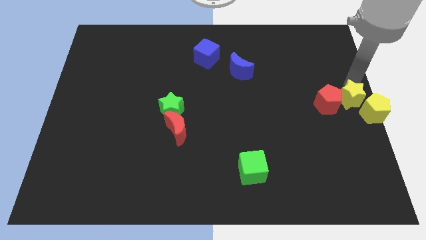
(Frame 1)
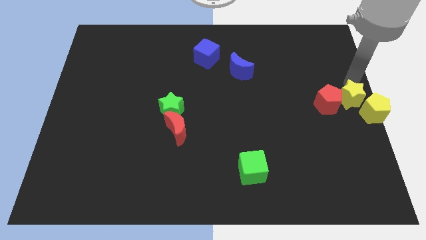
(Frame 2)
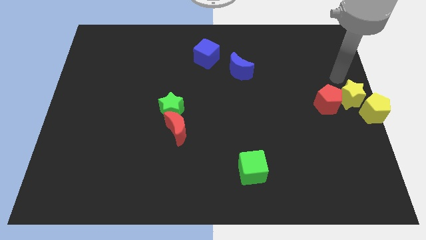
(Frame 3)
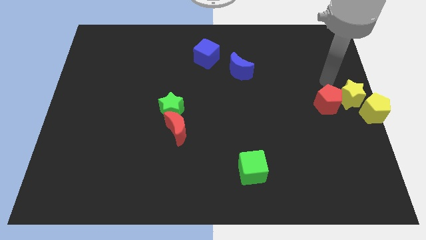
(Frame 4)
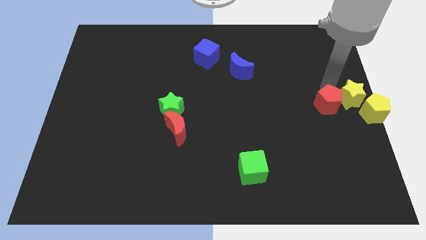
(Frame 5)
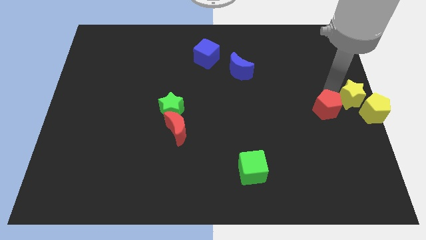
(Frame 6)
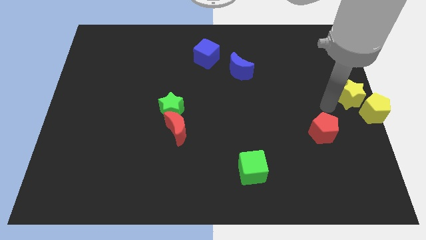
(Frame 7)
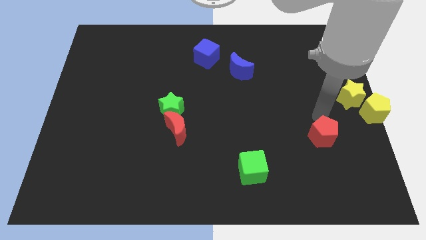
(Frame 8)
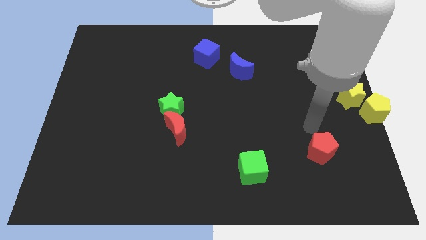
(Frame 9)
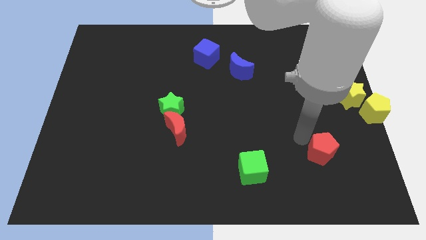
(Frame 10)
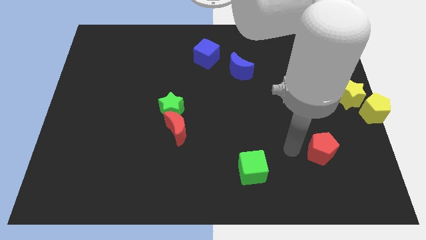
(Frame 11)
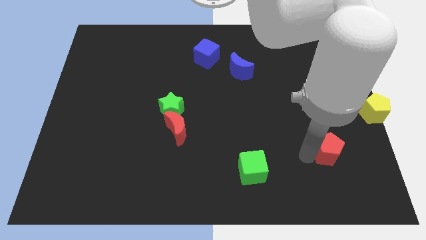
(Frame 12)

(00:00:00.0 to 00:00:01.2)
move the red pentagon diagonally on the bottom left side of the yellow pentagon

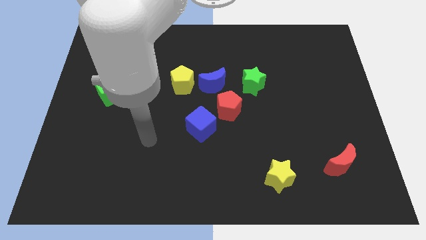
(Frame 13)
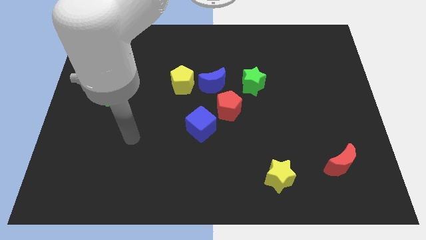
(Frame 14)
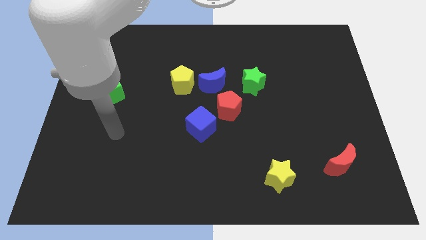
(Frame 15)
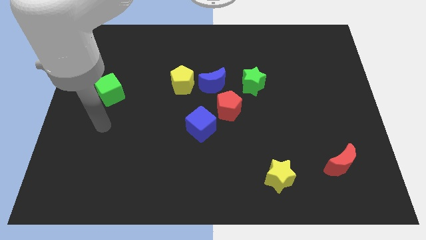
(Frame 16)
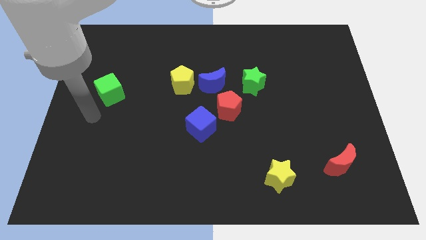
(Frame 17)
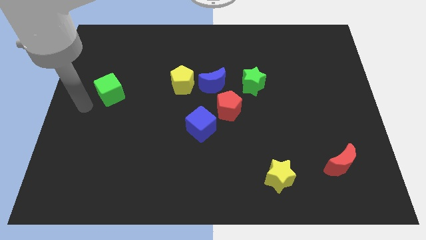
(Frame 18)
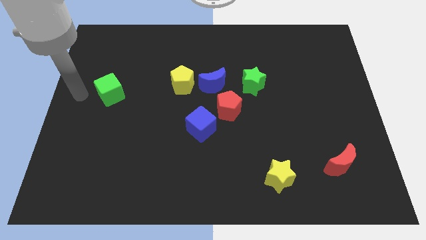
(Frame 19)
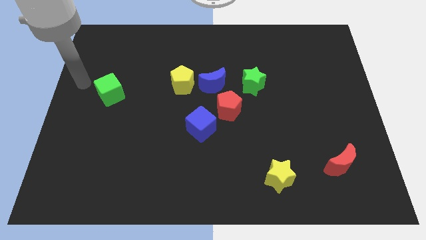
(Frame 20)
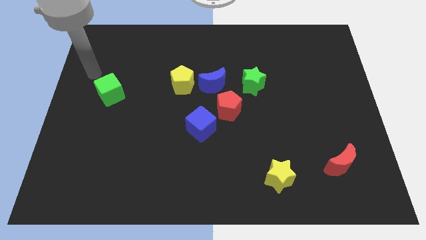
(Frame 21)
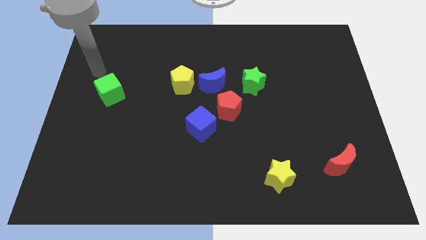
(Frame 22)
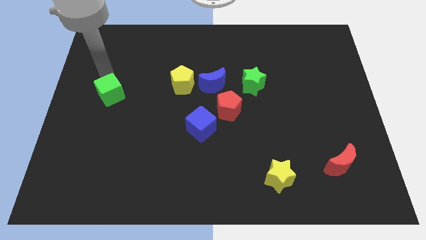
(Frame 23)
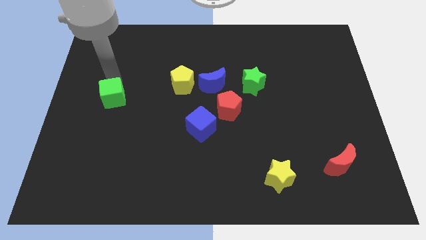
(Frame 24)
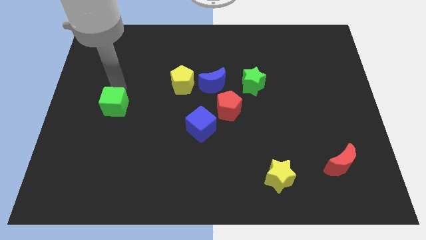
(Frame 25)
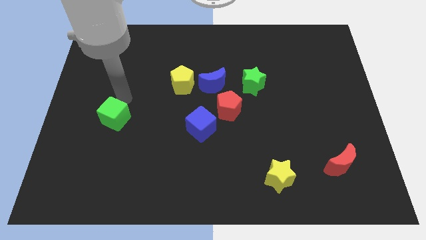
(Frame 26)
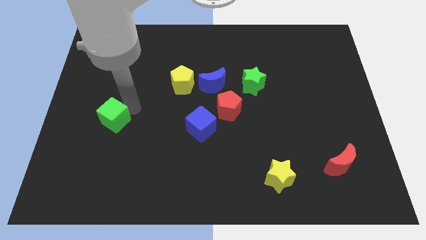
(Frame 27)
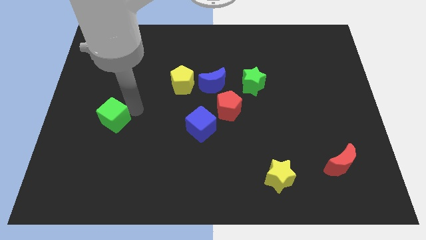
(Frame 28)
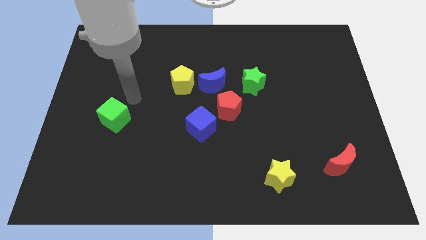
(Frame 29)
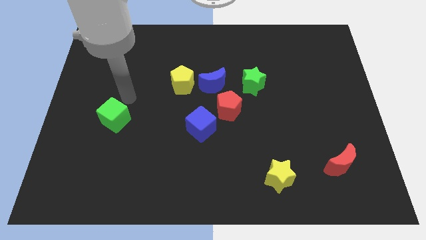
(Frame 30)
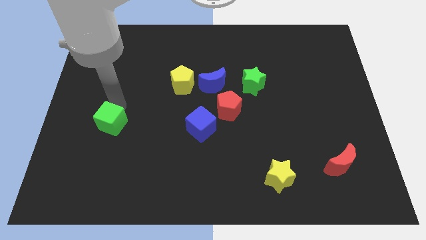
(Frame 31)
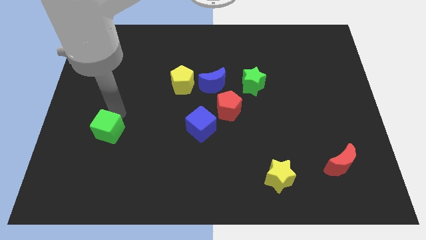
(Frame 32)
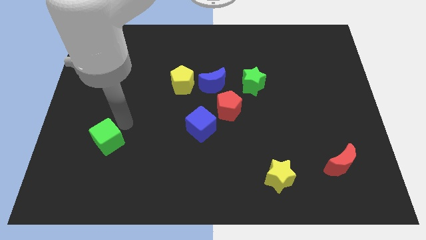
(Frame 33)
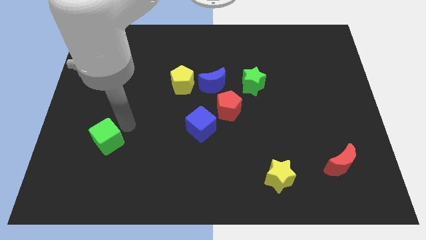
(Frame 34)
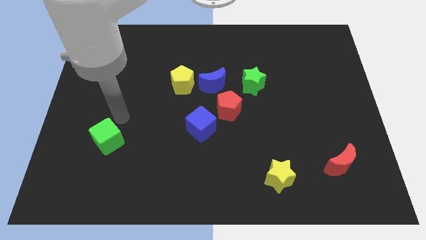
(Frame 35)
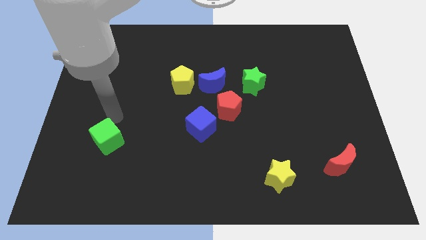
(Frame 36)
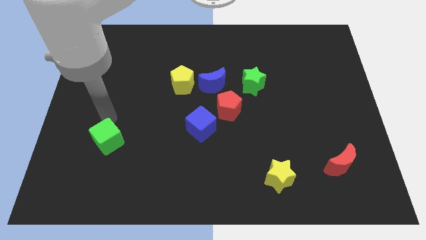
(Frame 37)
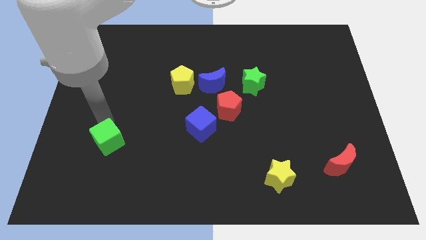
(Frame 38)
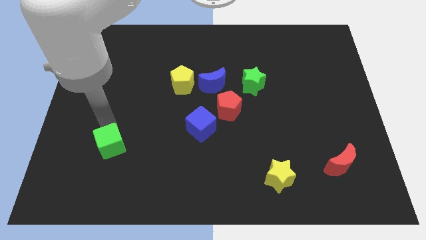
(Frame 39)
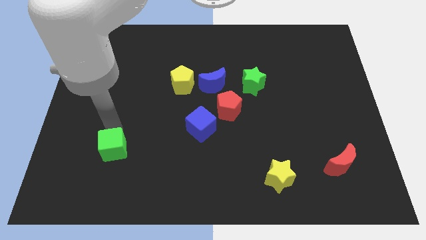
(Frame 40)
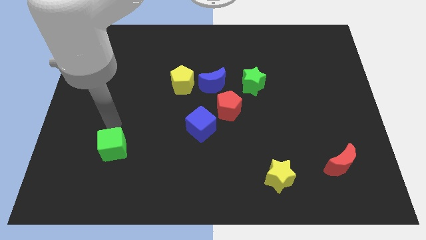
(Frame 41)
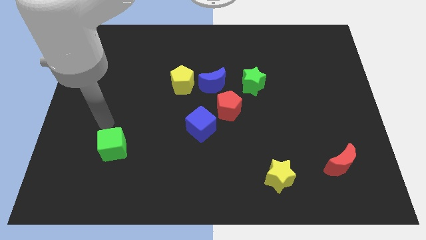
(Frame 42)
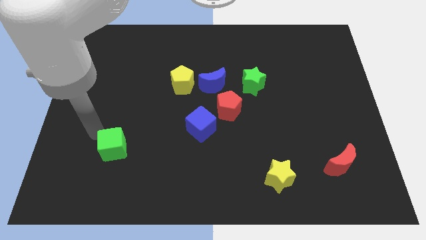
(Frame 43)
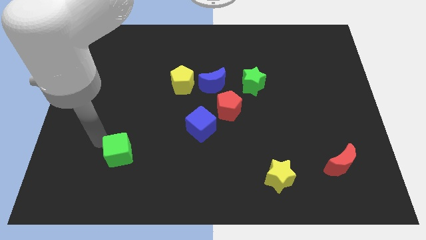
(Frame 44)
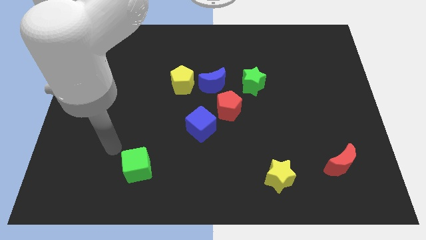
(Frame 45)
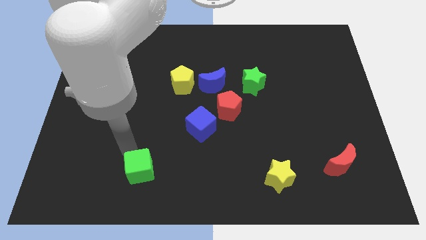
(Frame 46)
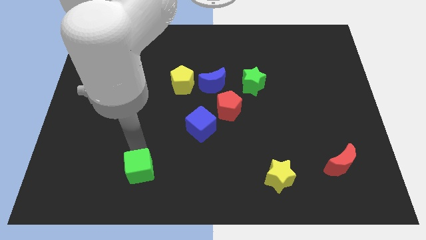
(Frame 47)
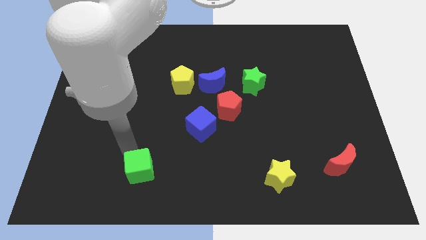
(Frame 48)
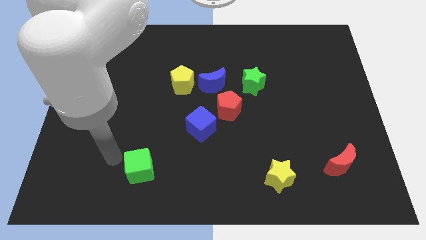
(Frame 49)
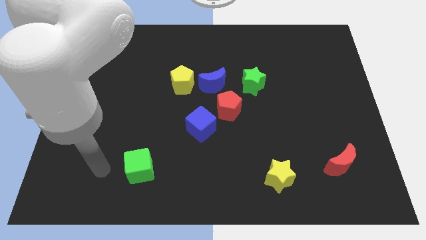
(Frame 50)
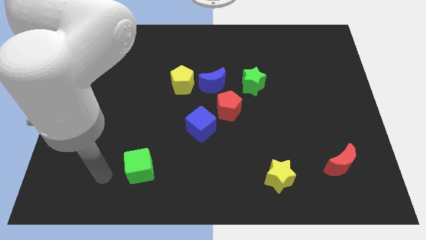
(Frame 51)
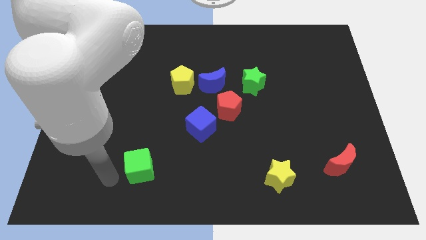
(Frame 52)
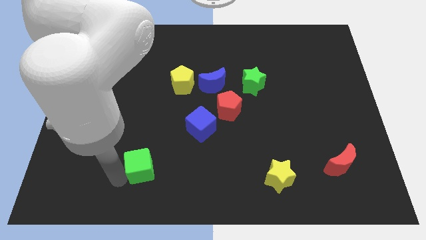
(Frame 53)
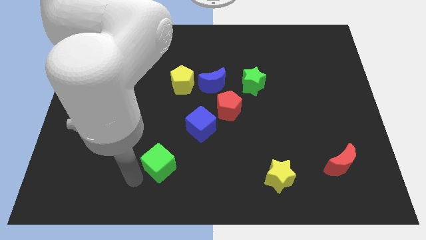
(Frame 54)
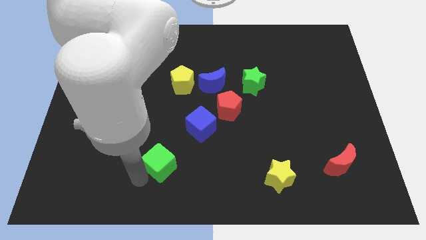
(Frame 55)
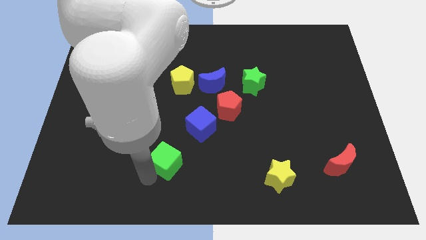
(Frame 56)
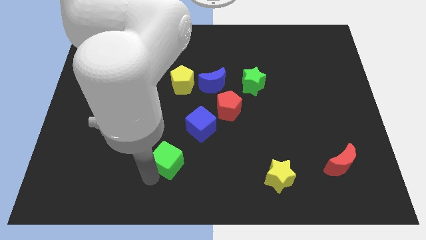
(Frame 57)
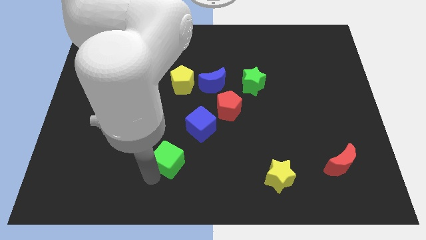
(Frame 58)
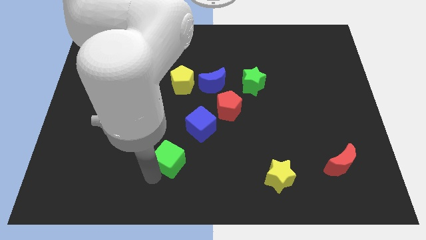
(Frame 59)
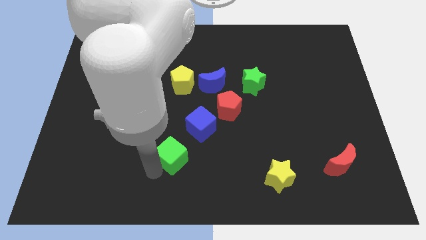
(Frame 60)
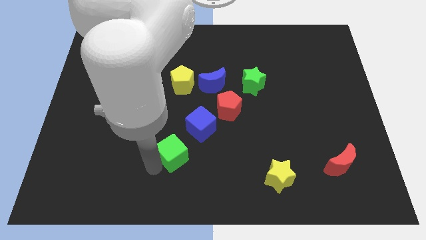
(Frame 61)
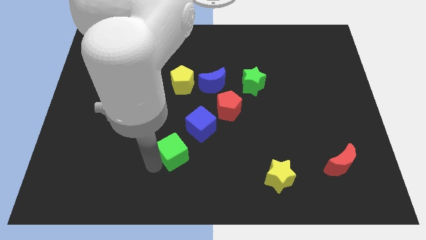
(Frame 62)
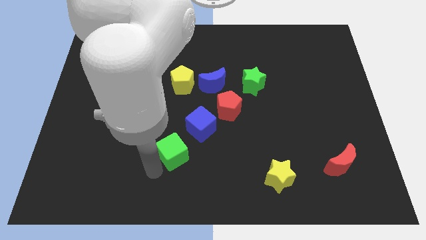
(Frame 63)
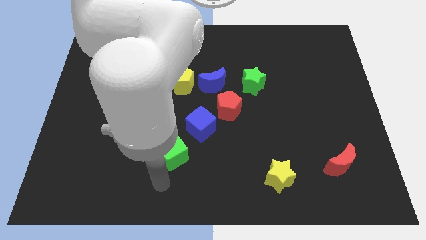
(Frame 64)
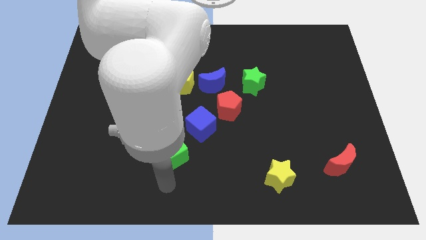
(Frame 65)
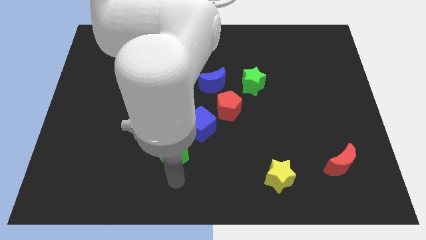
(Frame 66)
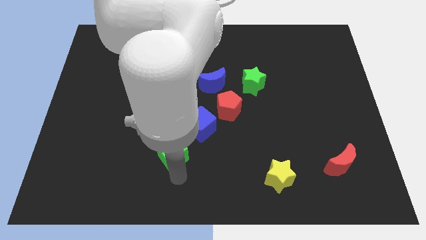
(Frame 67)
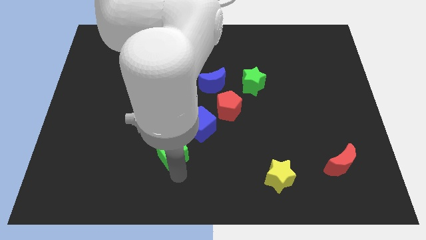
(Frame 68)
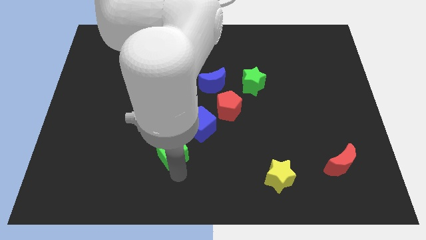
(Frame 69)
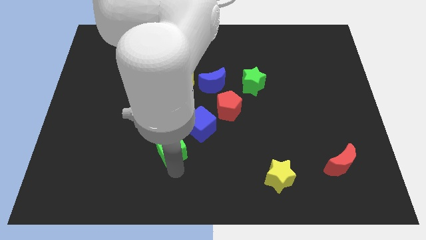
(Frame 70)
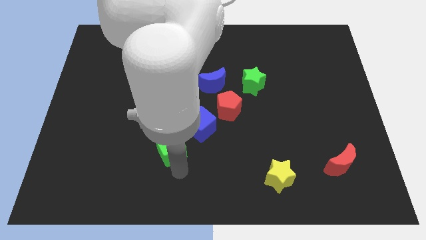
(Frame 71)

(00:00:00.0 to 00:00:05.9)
make a diagonal line with the green cube blue cube red pentagon and green star

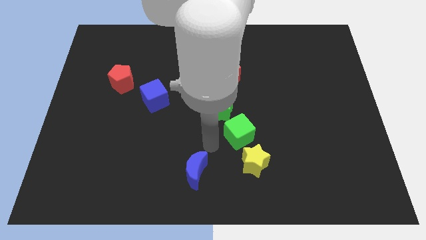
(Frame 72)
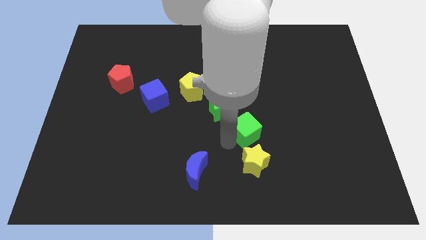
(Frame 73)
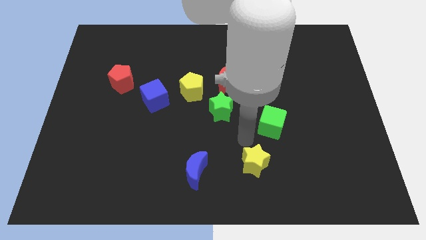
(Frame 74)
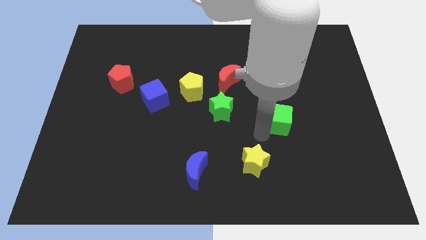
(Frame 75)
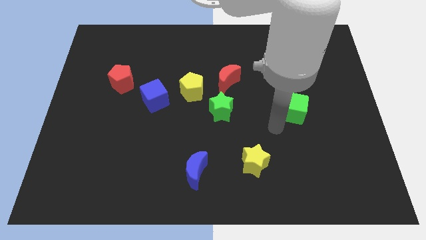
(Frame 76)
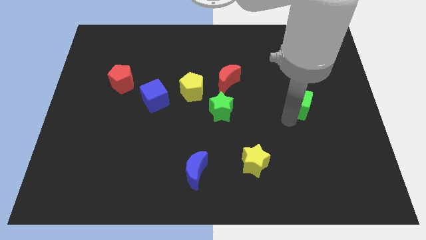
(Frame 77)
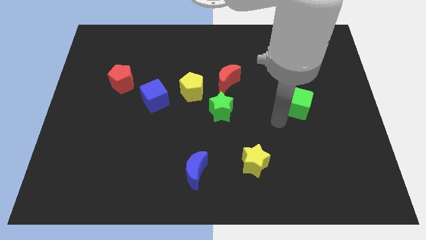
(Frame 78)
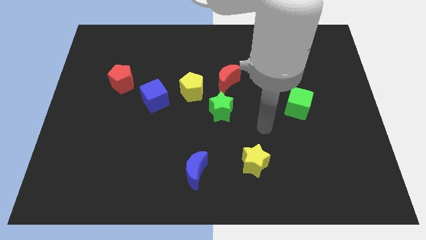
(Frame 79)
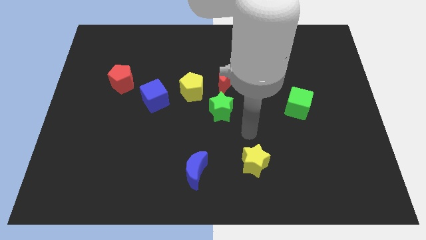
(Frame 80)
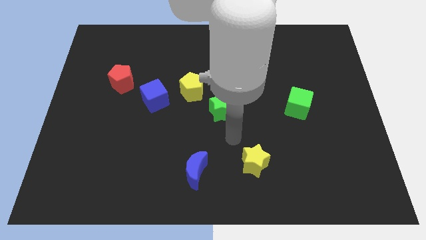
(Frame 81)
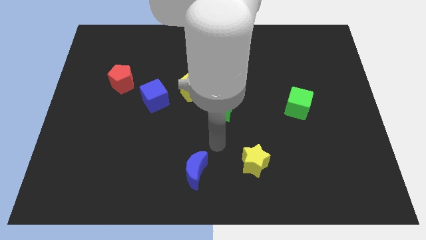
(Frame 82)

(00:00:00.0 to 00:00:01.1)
push green cube to the right of green star

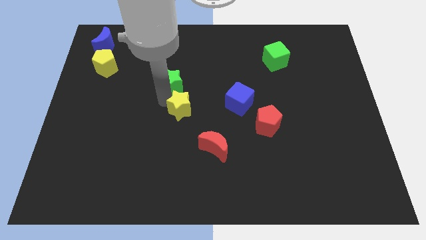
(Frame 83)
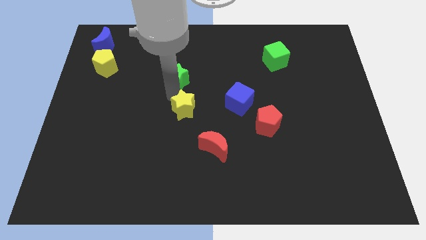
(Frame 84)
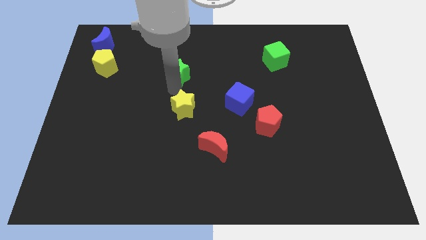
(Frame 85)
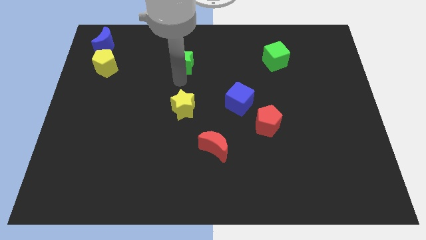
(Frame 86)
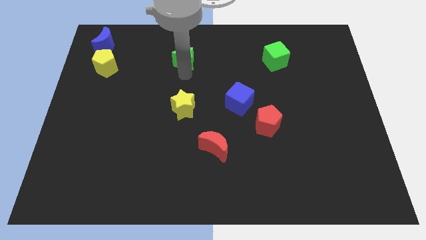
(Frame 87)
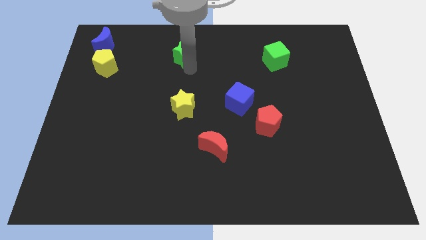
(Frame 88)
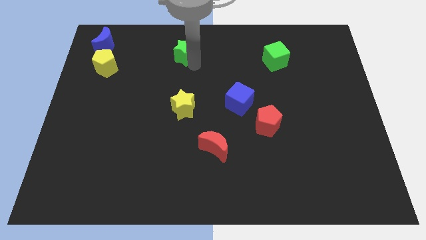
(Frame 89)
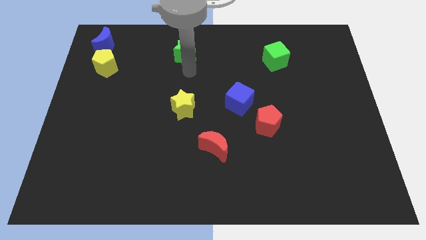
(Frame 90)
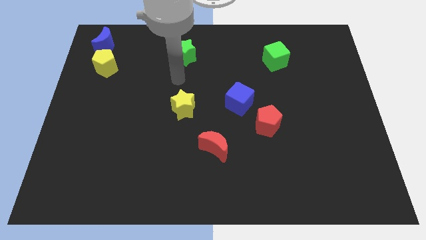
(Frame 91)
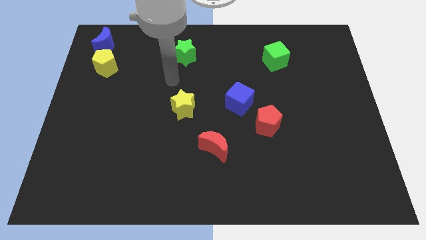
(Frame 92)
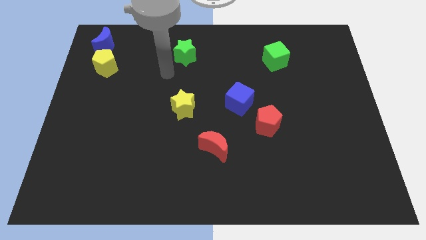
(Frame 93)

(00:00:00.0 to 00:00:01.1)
separate the green star from yellow star
